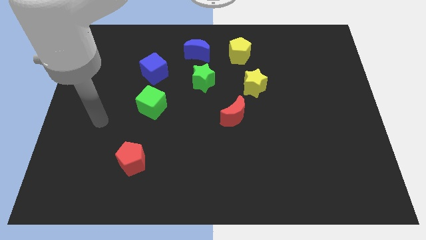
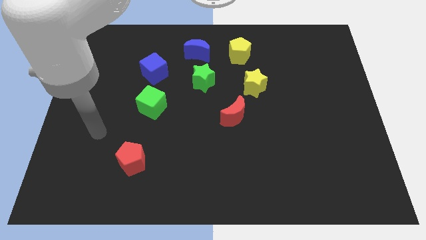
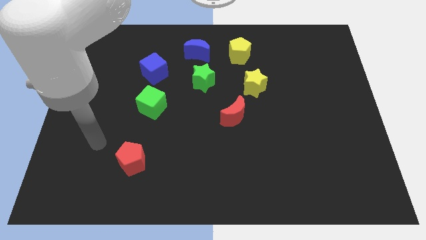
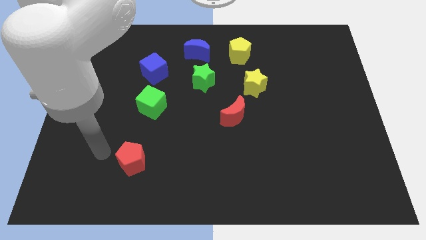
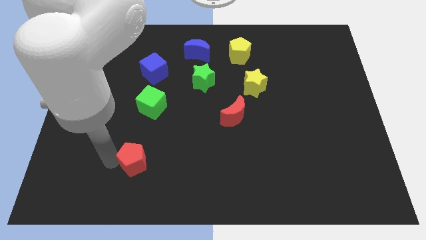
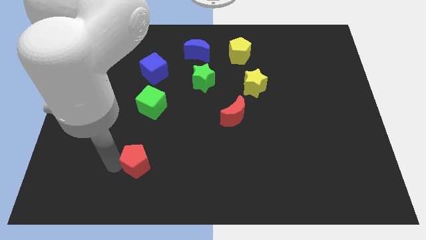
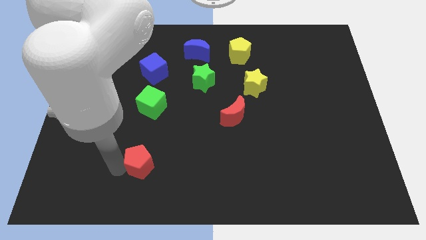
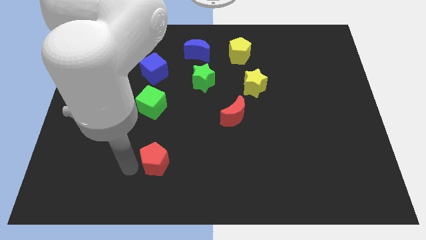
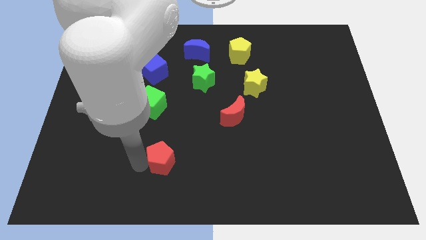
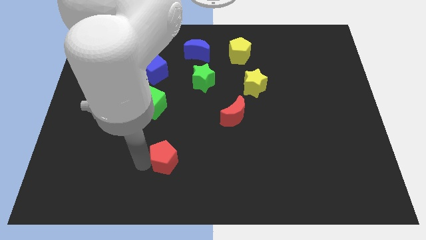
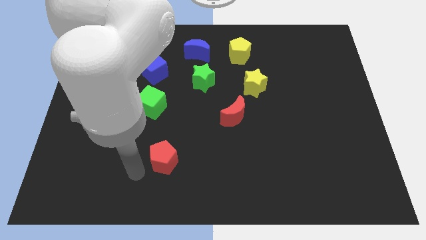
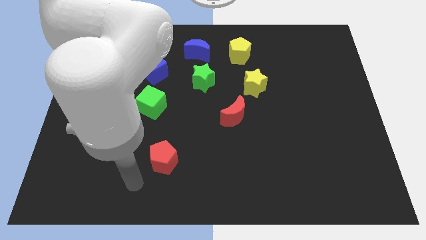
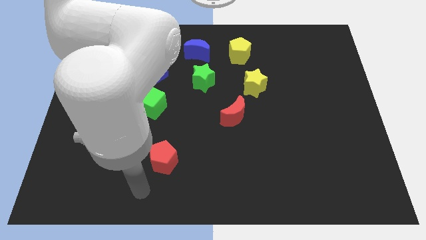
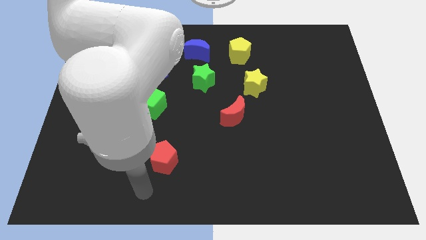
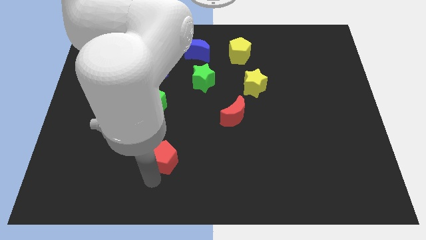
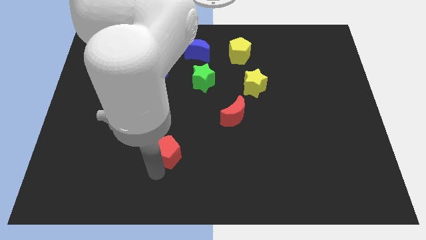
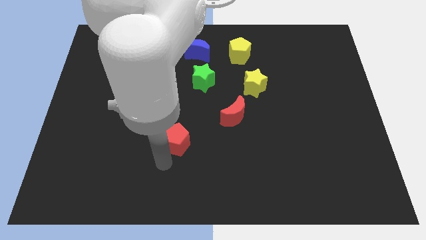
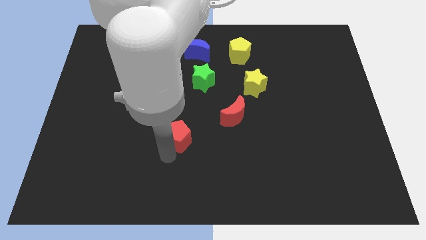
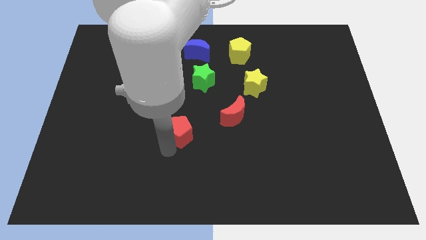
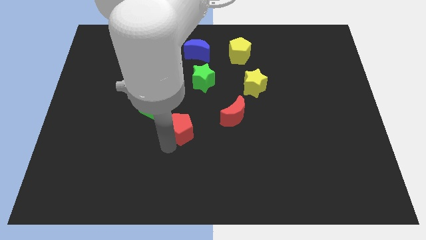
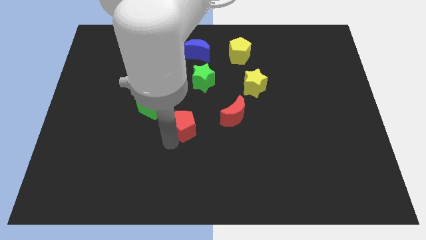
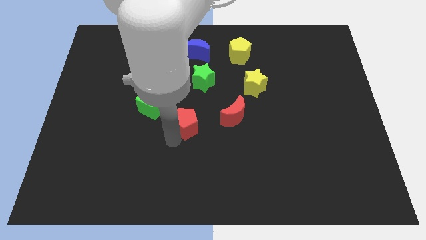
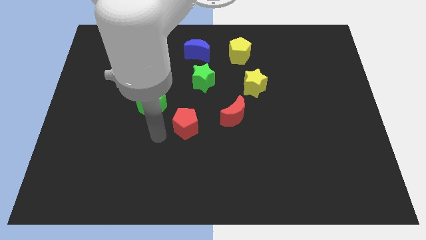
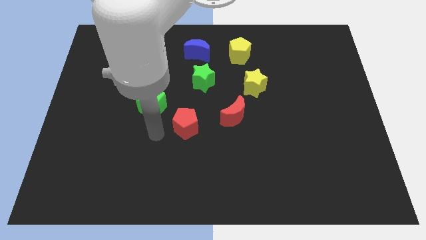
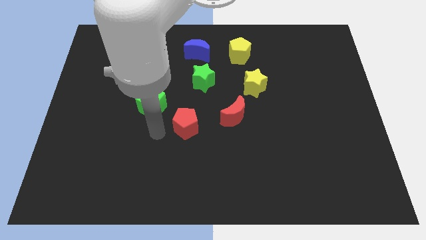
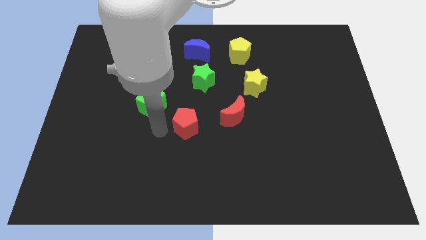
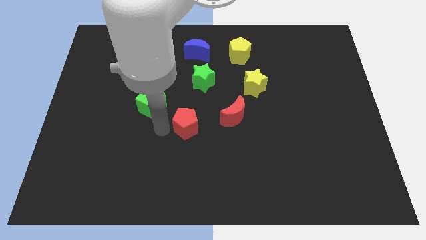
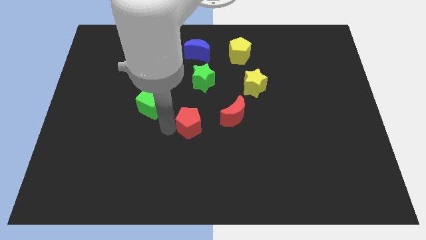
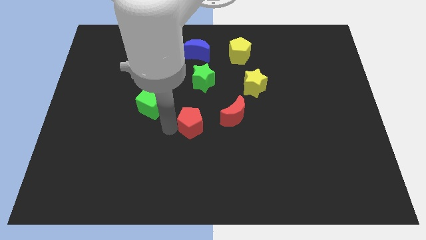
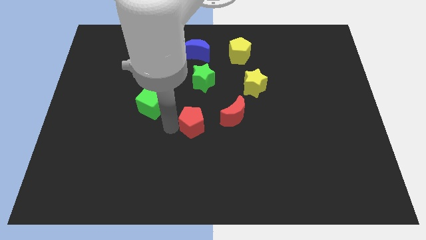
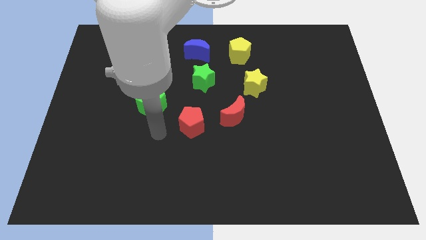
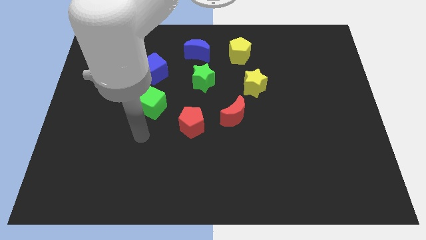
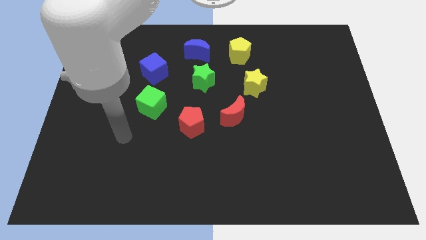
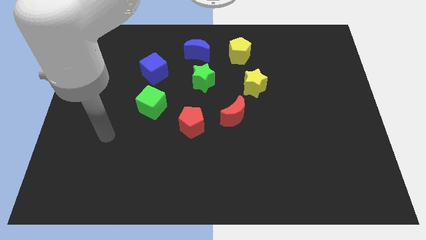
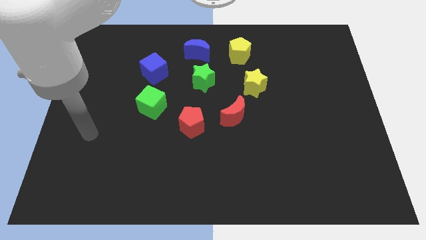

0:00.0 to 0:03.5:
move the red pentagon to the center of the board

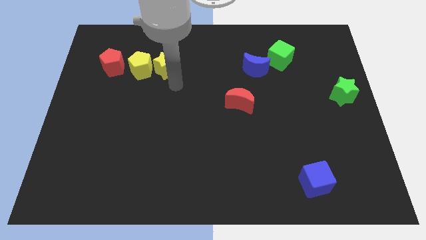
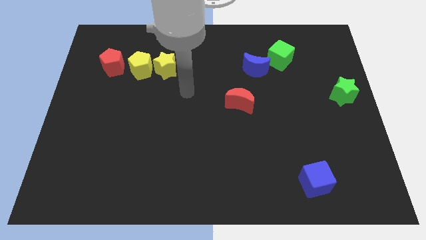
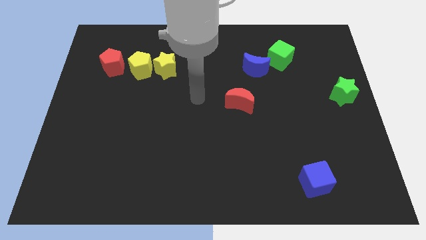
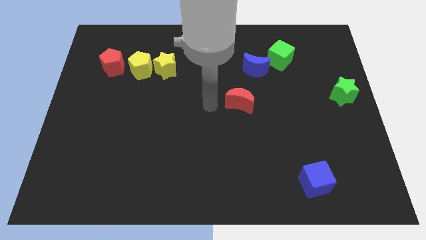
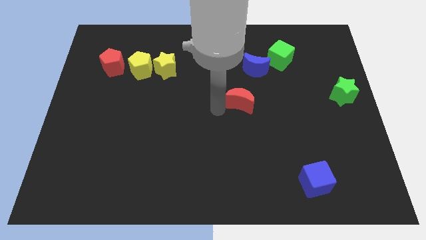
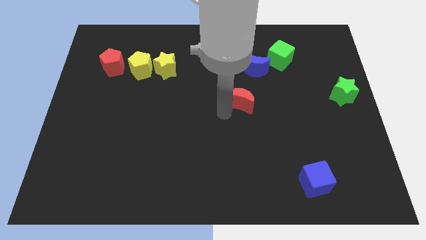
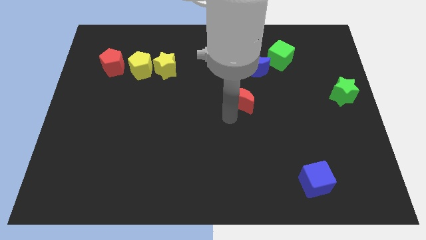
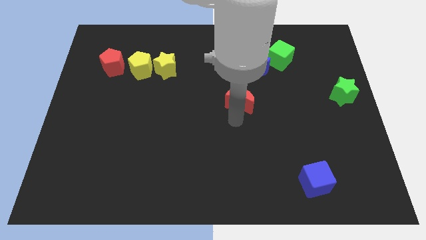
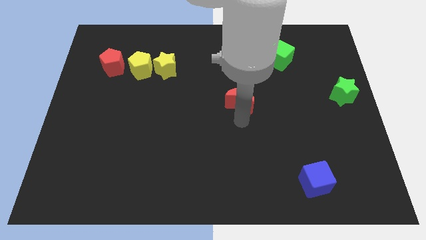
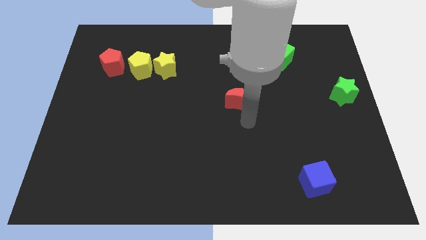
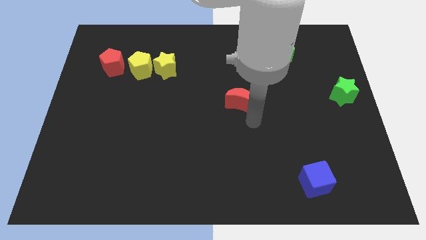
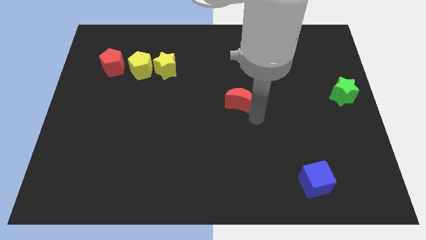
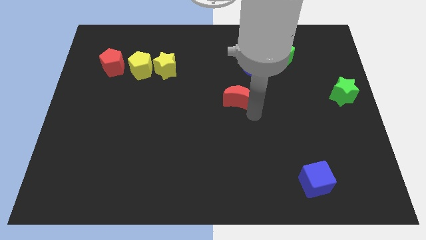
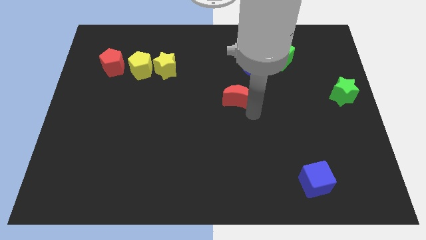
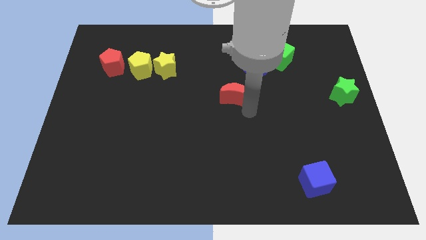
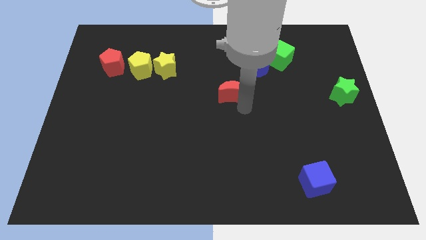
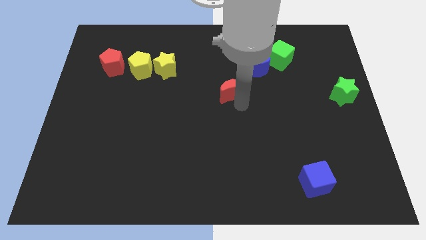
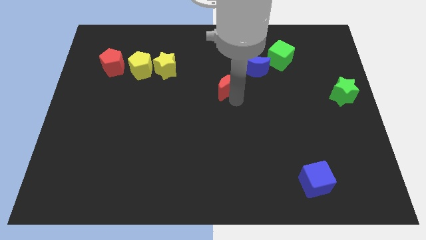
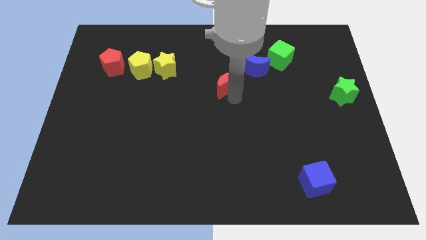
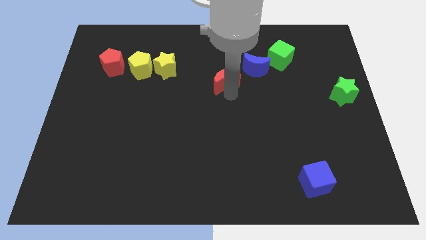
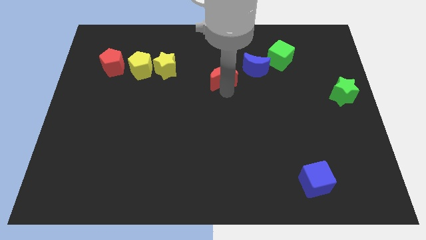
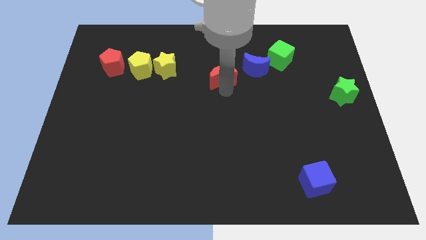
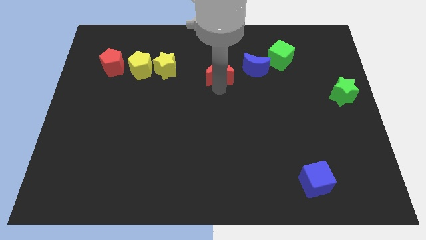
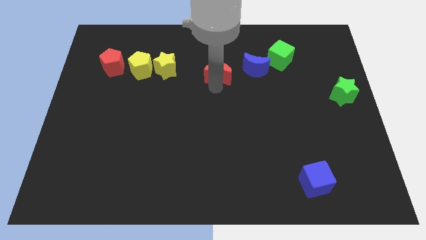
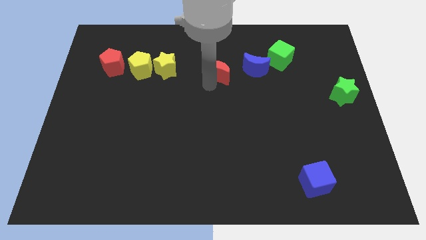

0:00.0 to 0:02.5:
push the red crescent towards tip center of the board

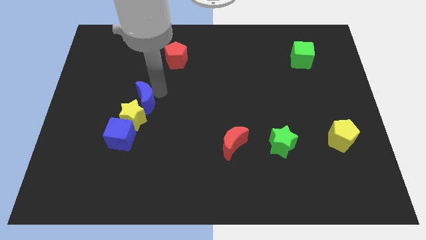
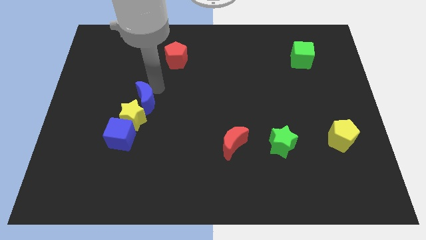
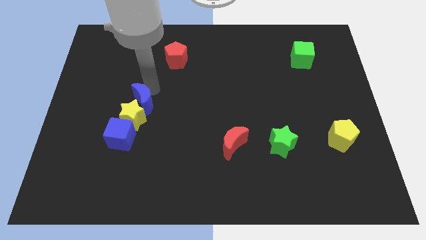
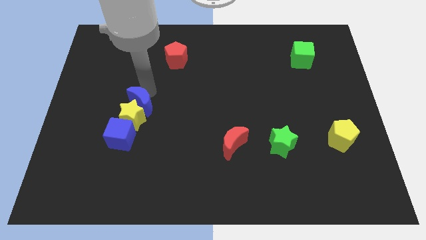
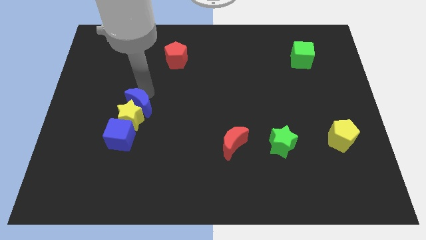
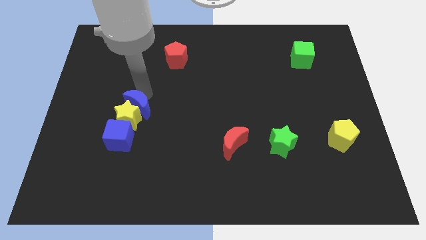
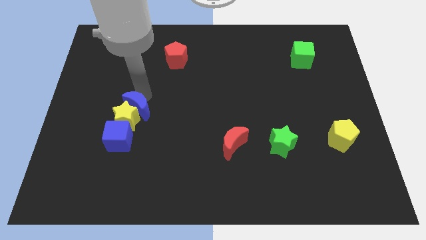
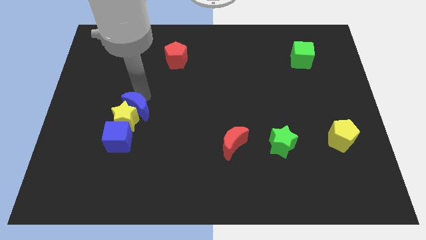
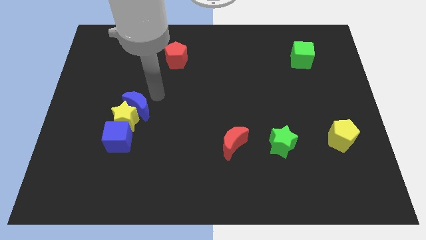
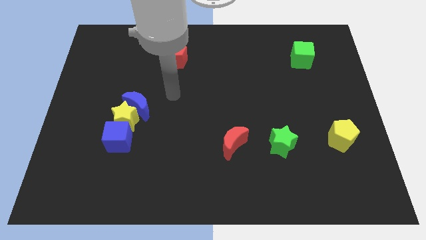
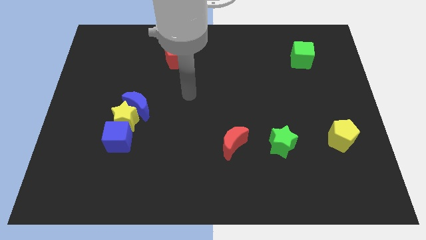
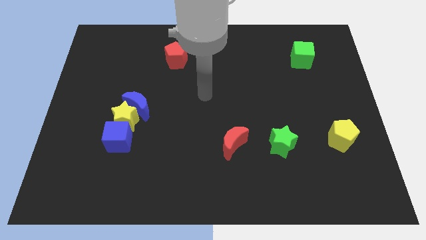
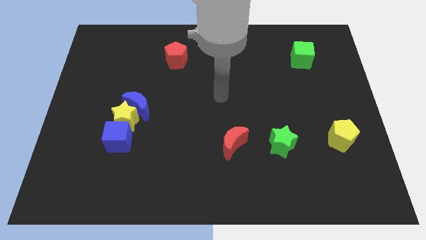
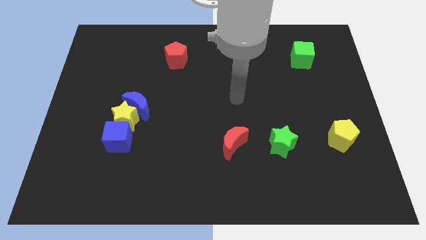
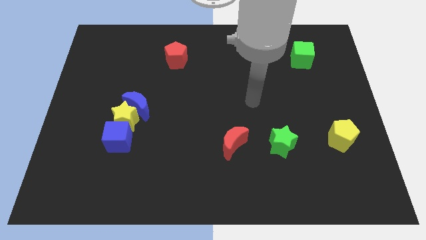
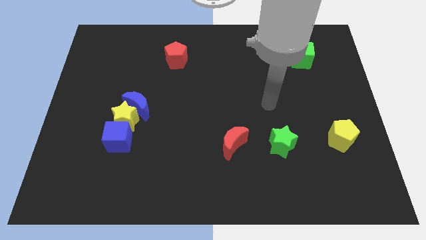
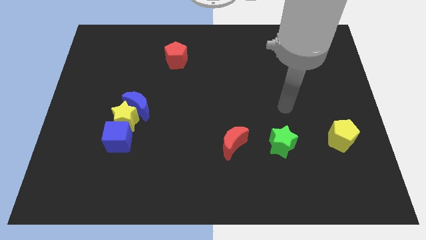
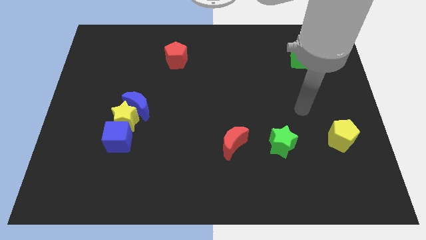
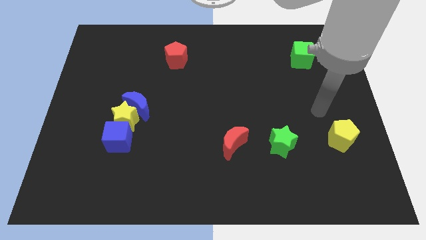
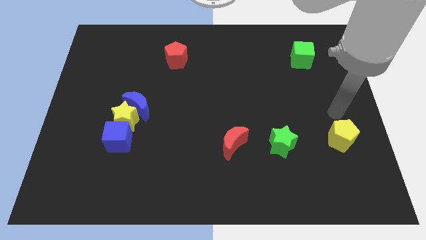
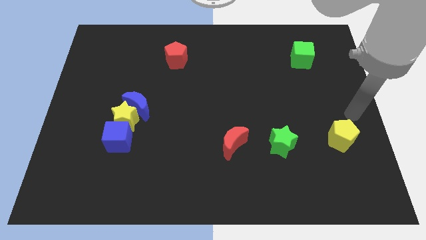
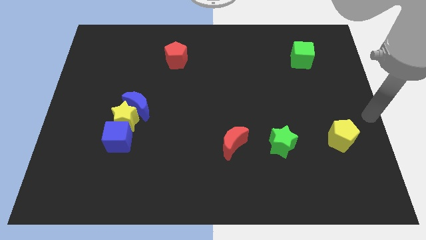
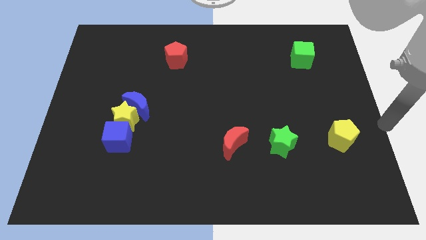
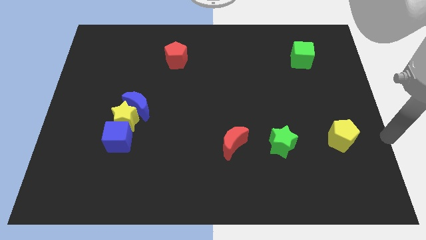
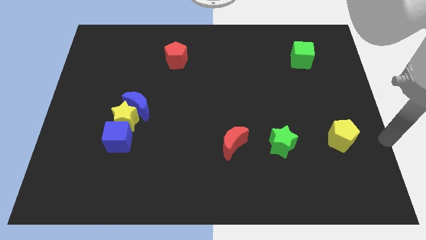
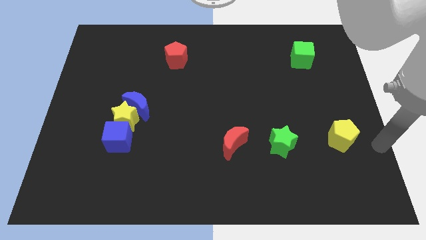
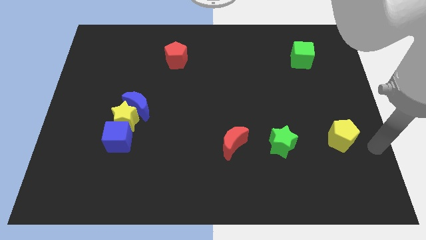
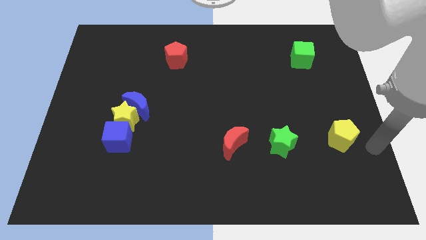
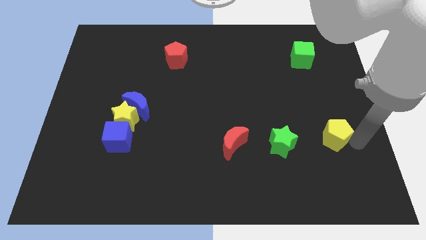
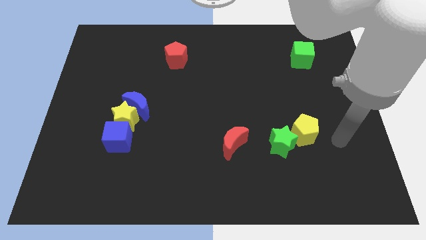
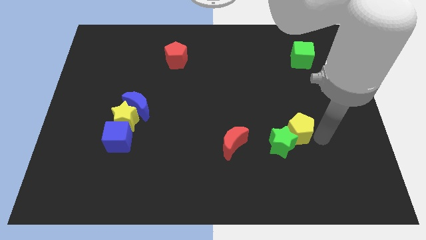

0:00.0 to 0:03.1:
drag the yelllow pentagon into the top left side of the green star
